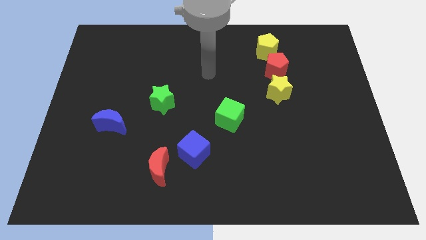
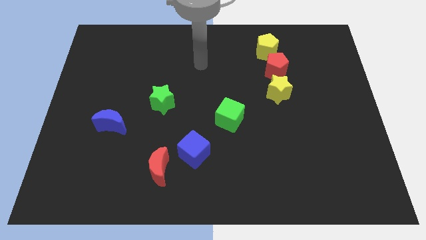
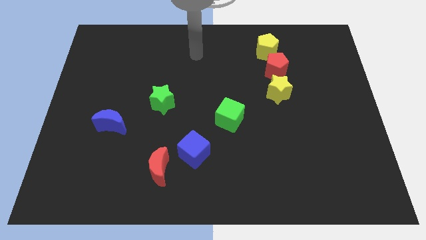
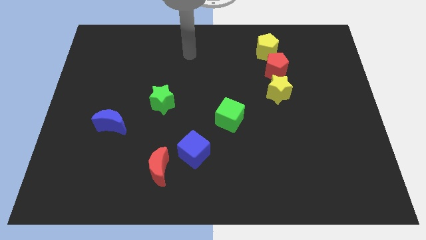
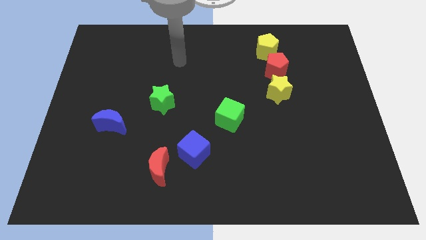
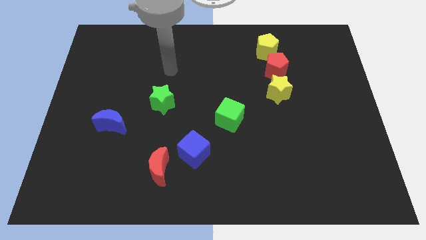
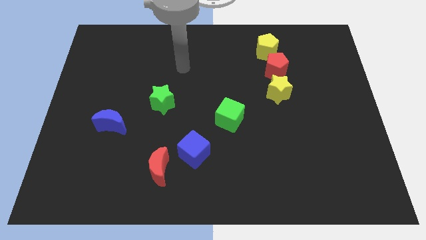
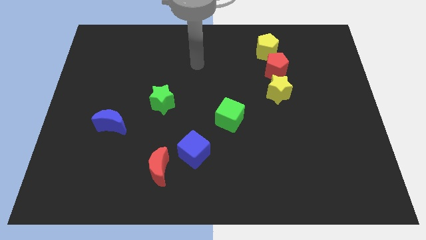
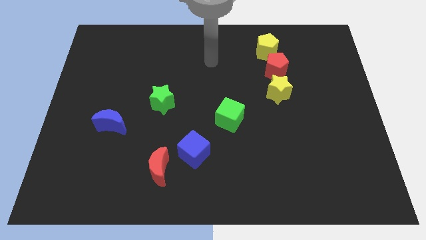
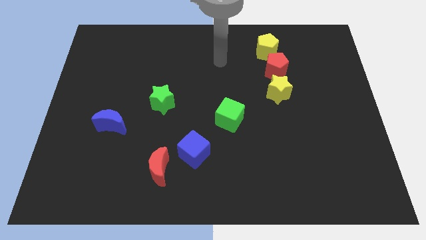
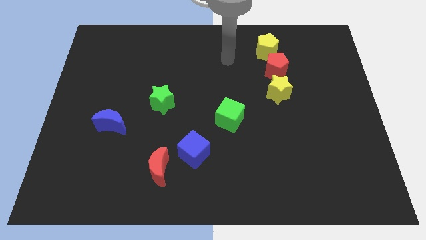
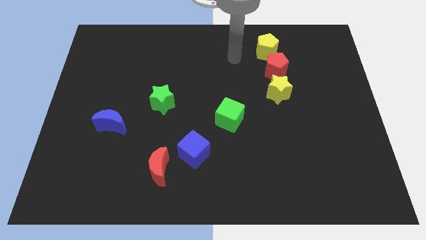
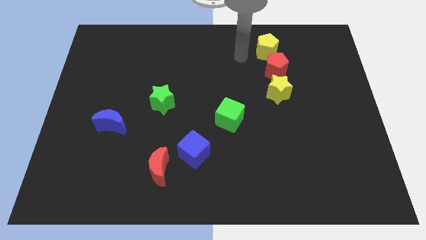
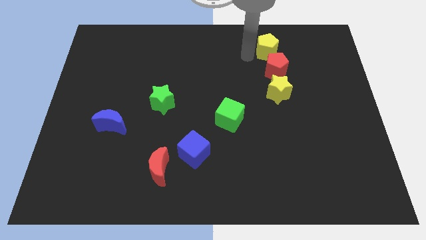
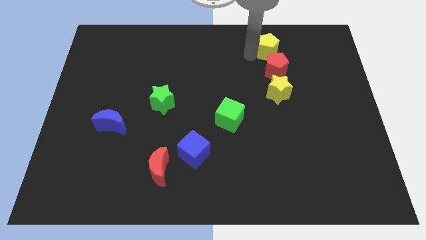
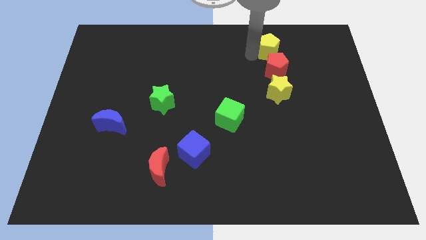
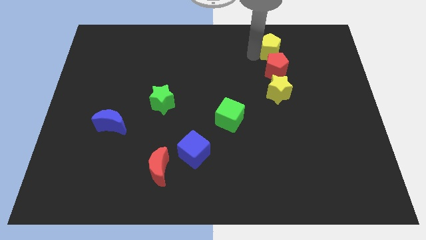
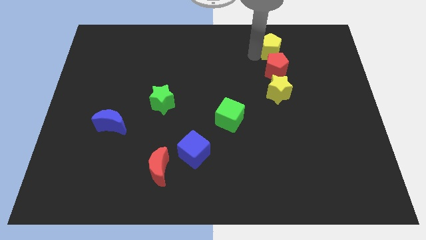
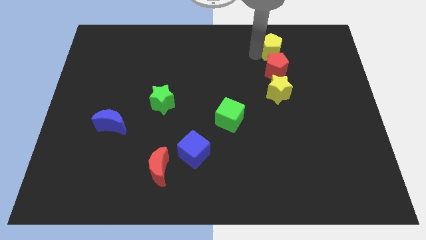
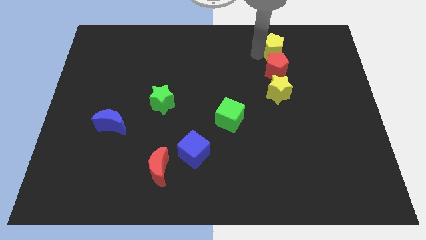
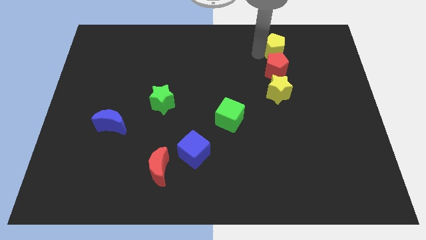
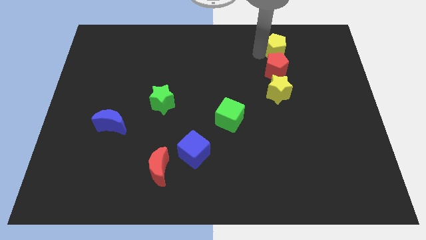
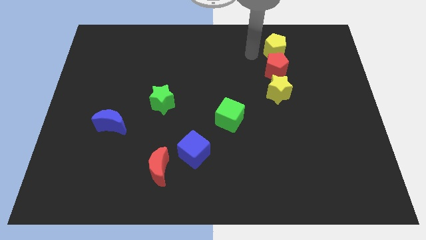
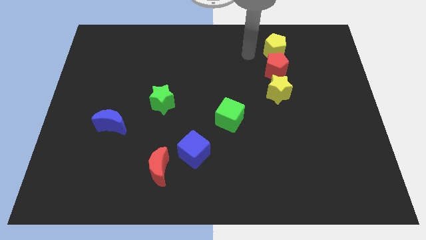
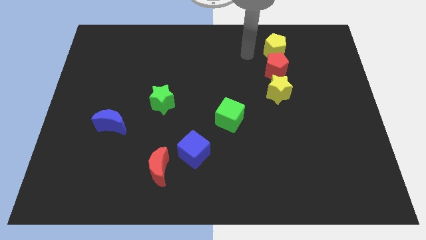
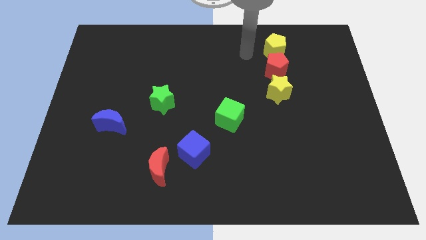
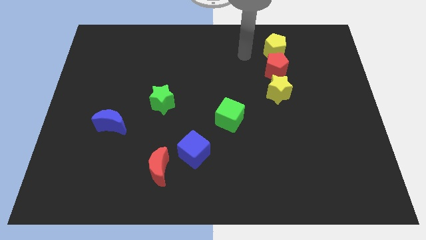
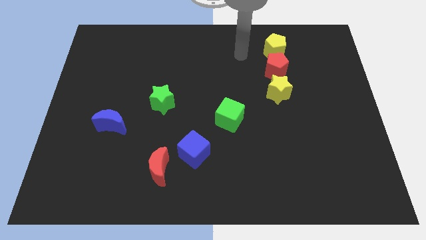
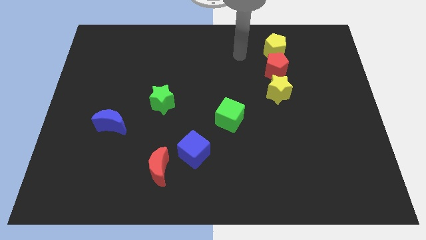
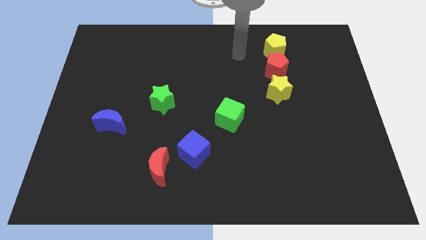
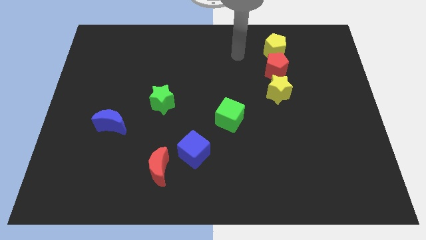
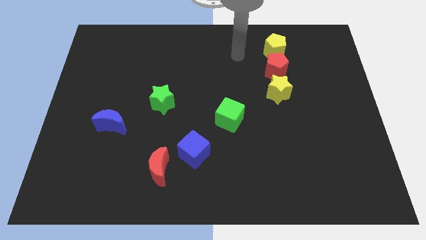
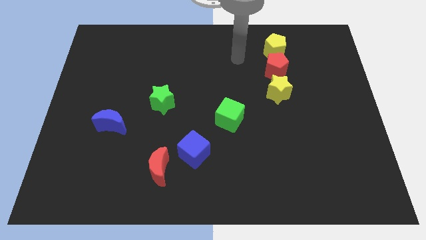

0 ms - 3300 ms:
move the yellow pentagon slightly to the top of red pentagon

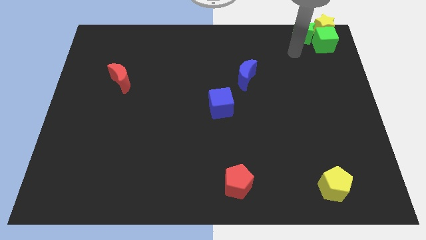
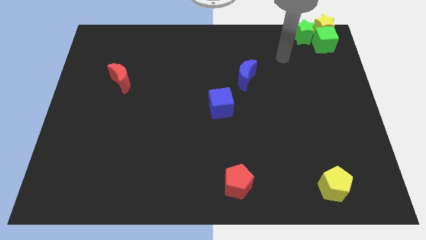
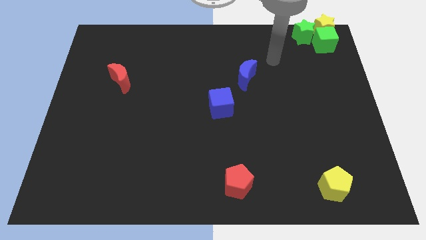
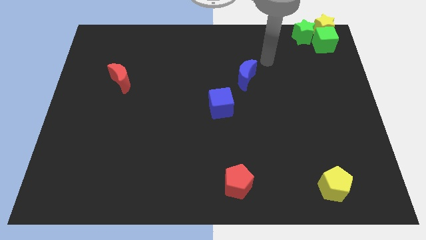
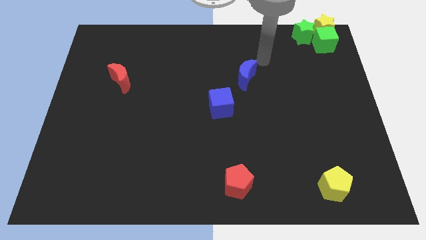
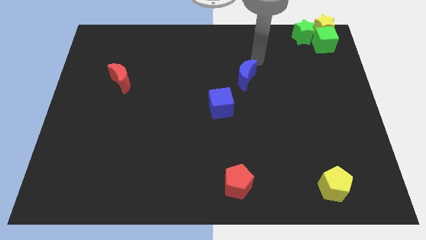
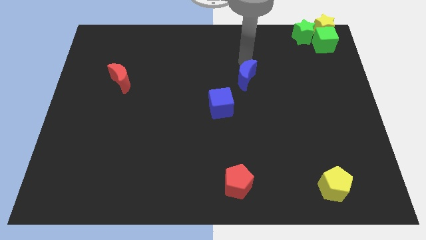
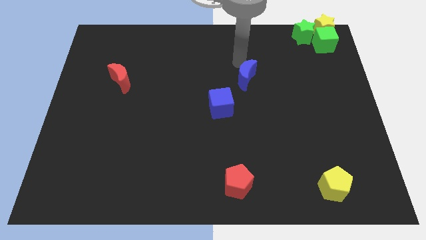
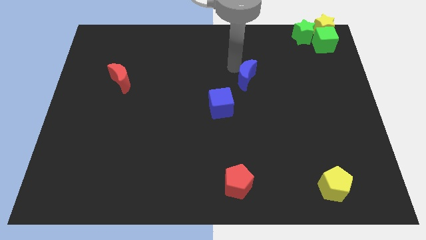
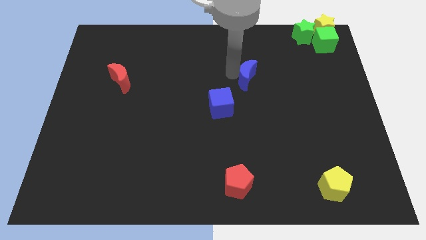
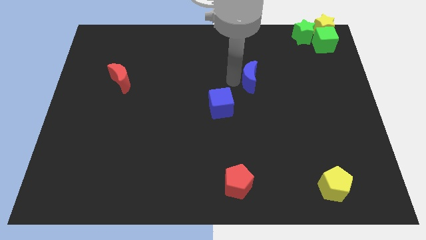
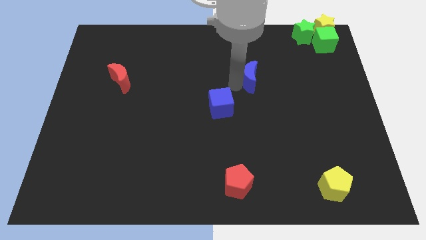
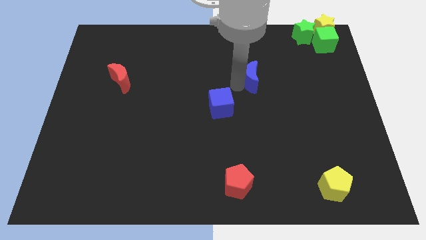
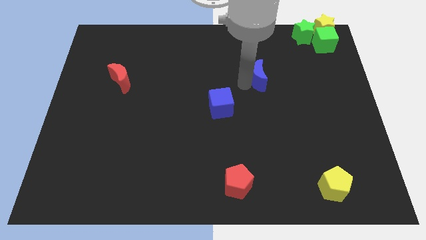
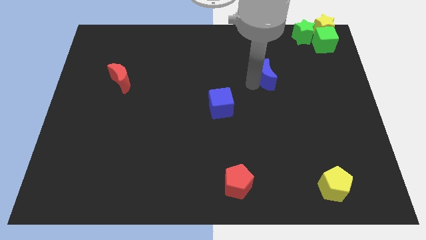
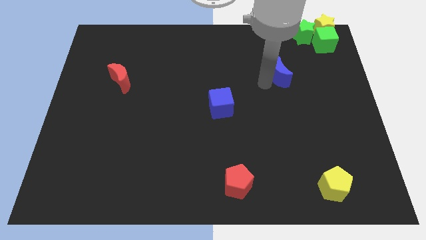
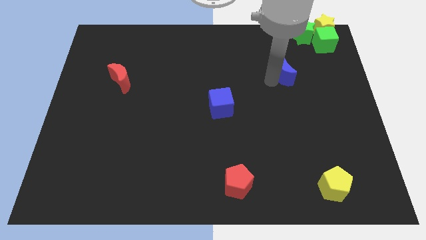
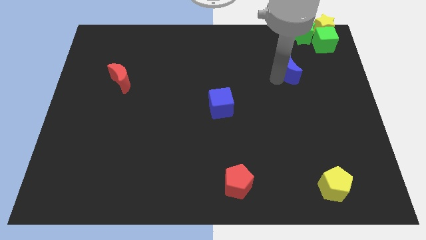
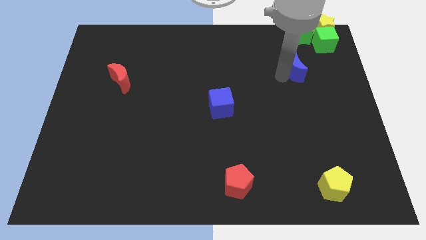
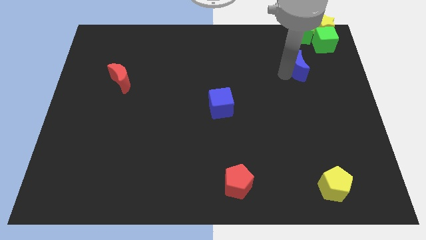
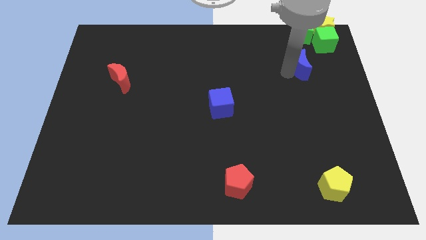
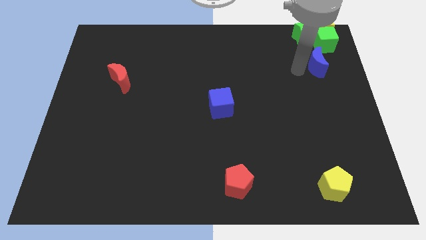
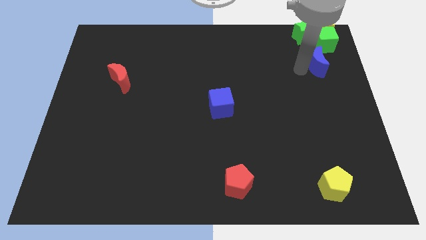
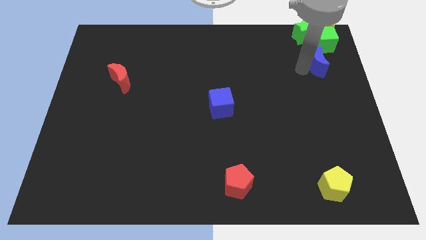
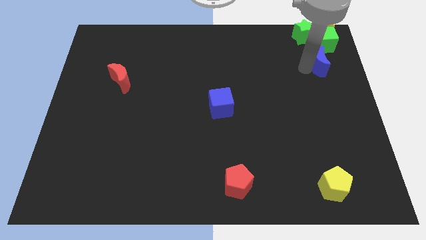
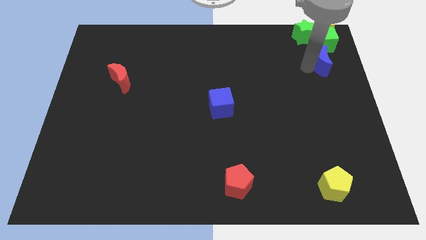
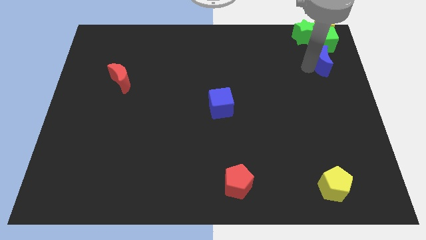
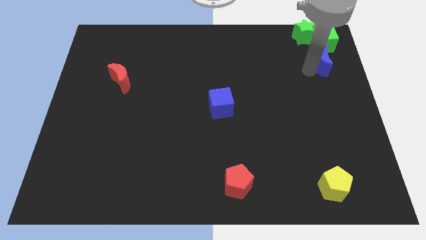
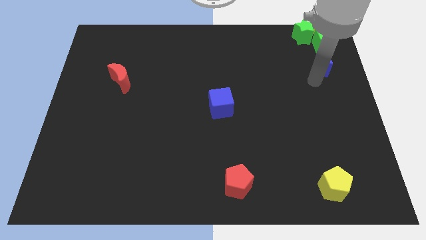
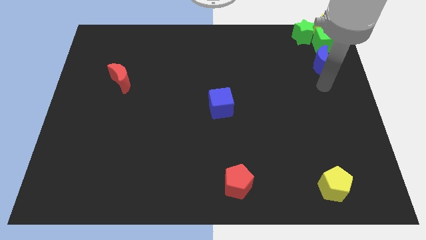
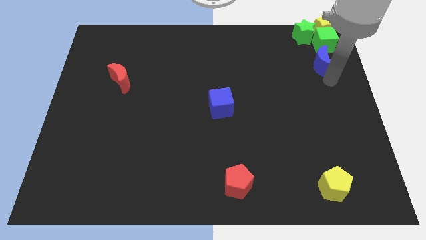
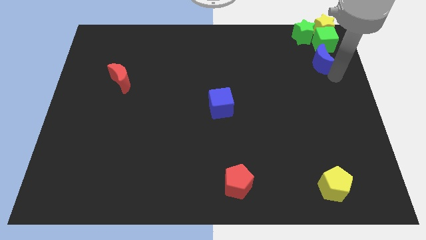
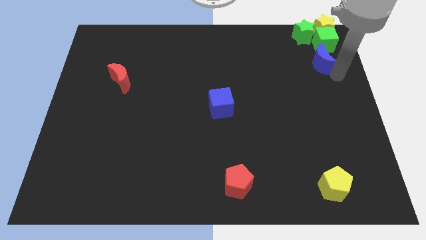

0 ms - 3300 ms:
push the blue crescent to the bottom of the green cube

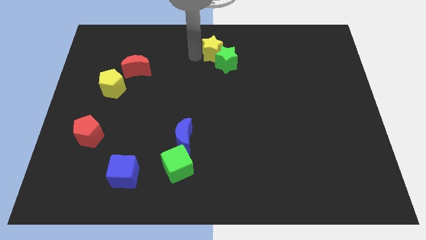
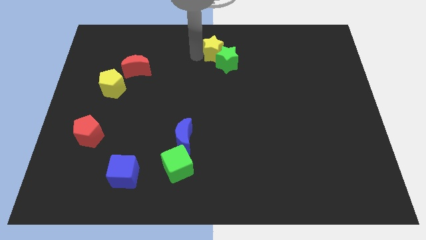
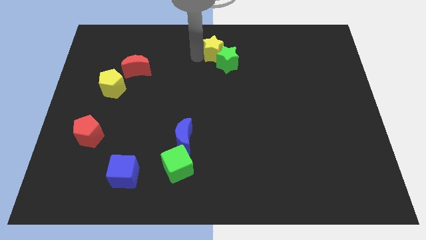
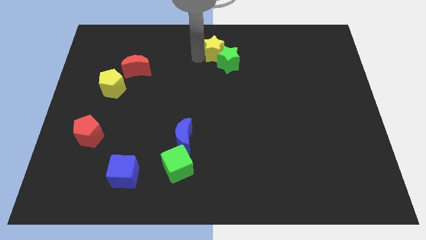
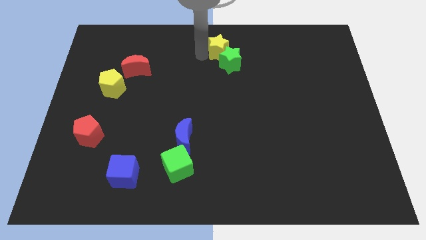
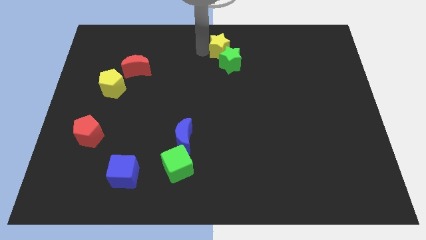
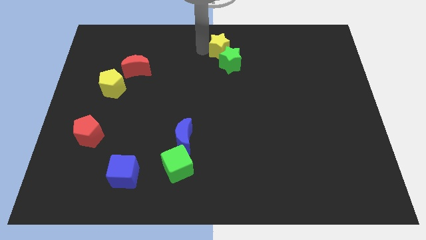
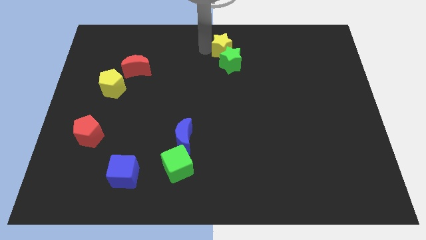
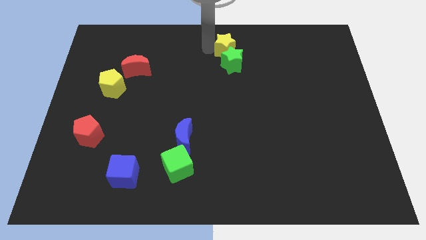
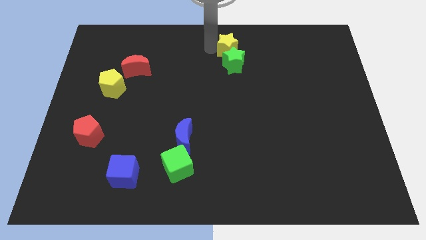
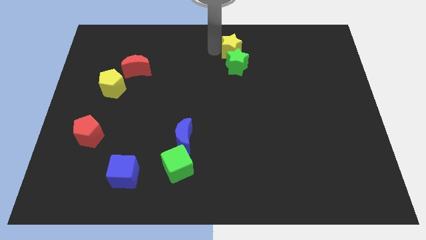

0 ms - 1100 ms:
move stars slightly right

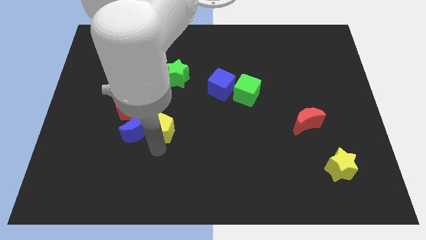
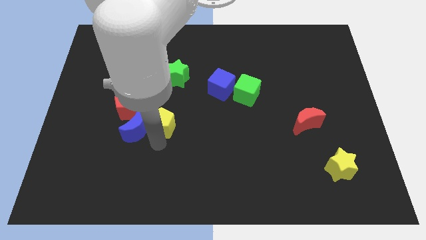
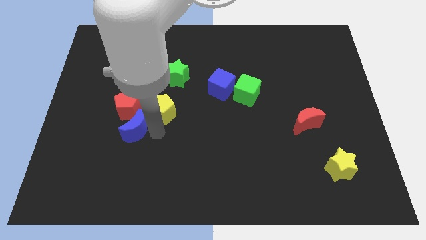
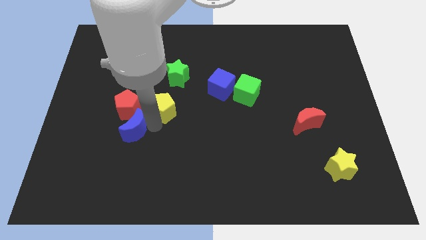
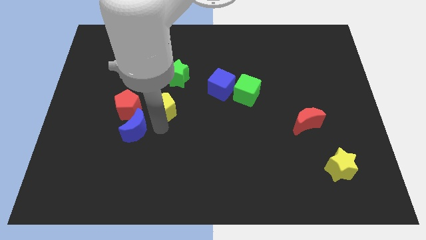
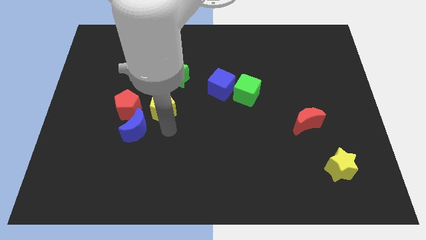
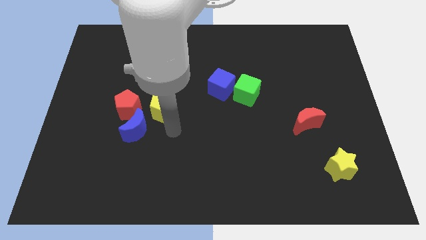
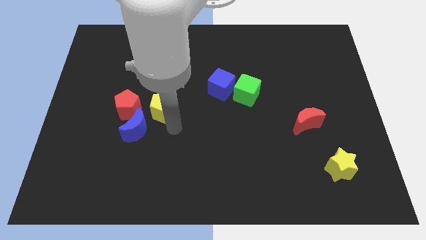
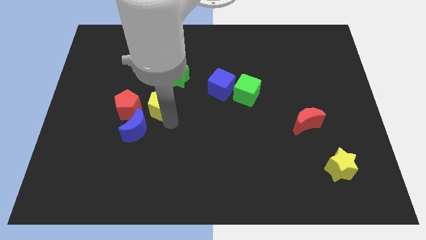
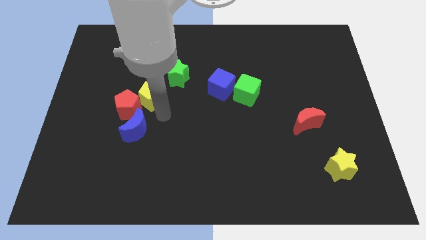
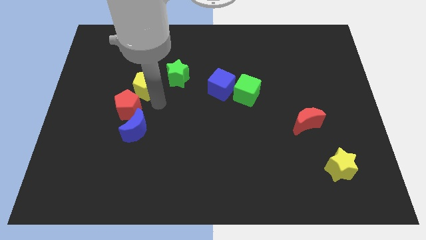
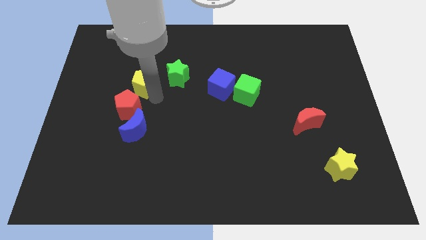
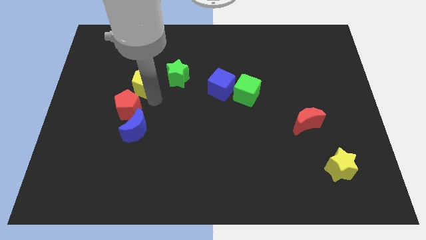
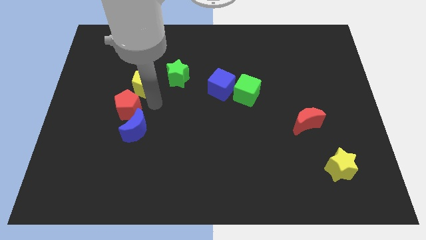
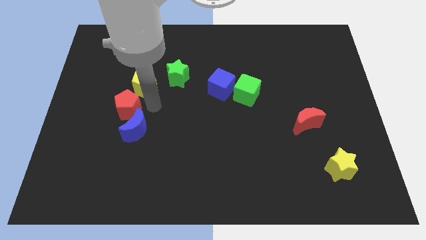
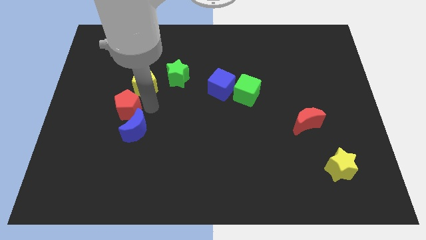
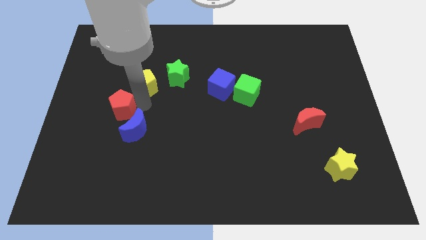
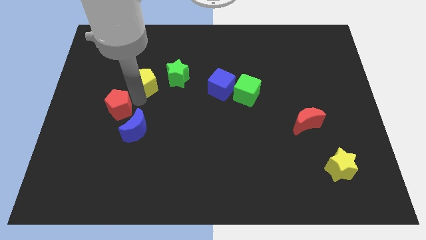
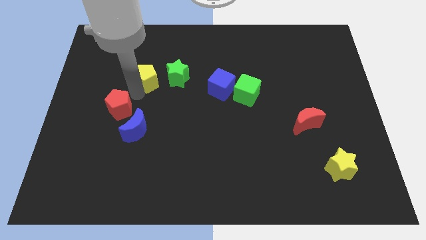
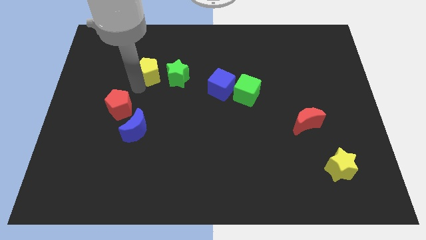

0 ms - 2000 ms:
move the yellow pentagon to the left side of the green star
